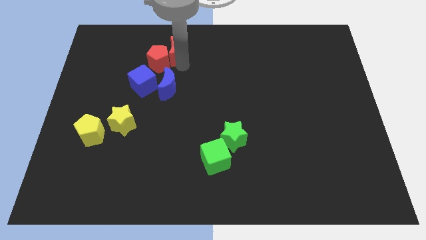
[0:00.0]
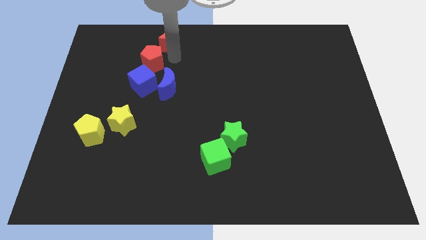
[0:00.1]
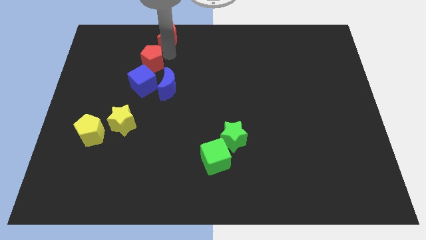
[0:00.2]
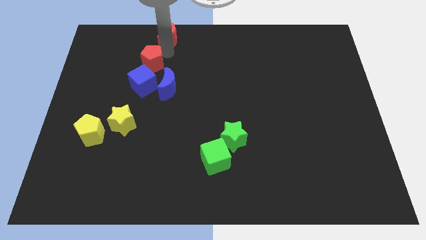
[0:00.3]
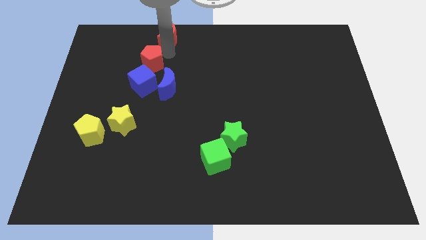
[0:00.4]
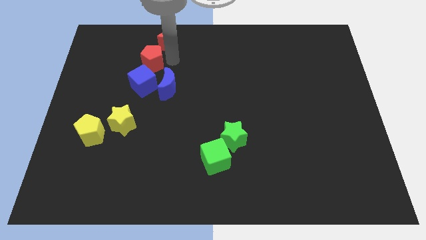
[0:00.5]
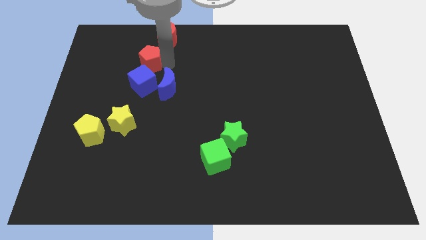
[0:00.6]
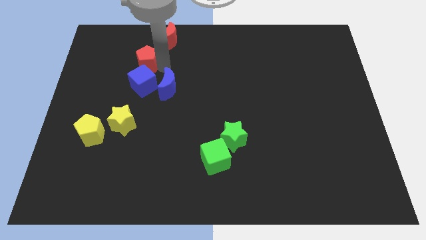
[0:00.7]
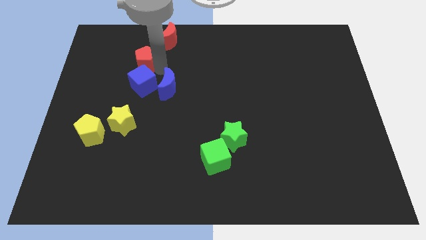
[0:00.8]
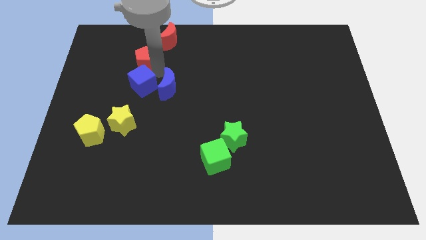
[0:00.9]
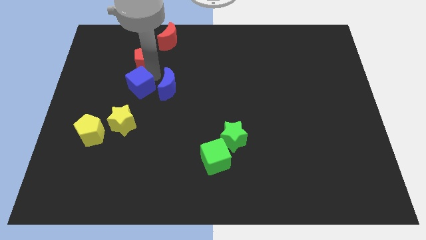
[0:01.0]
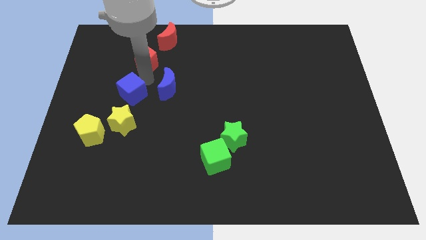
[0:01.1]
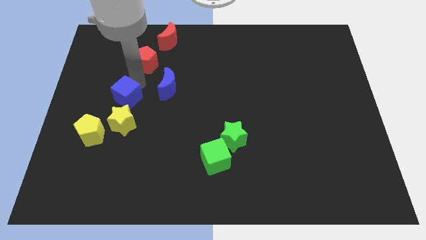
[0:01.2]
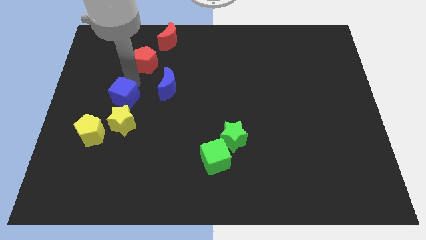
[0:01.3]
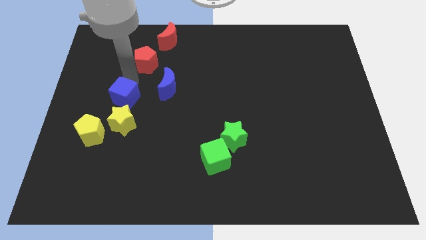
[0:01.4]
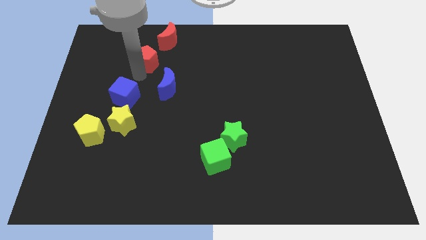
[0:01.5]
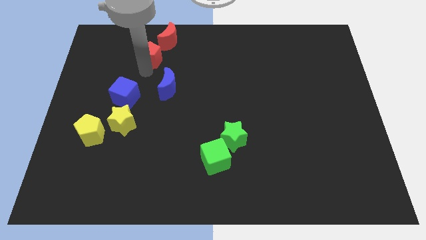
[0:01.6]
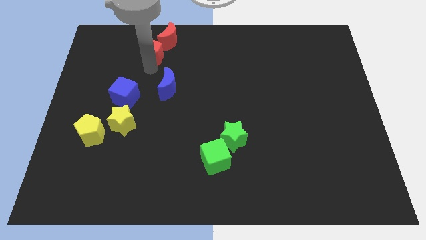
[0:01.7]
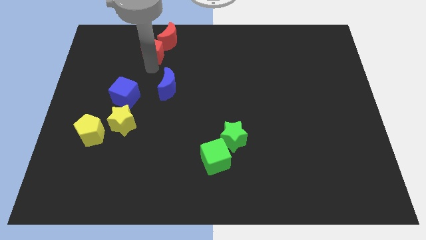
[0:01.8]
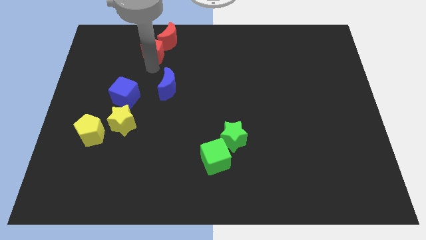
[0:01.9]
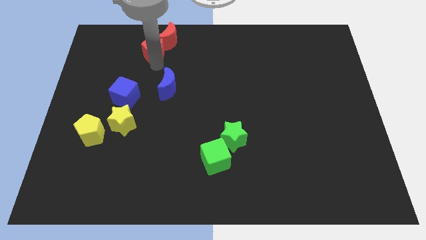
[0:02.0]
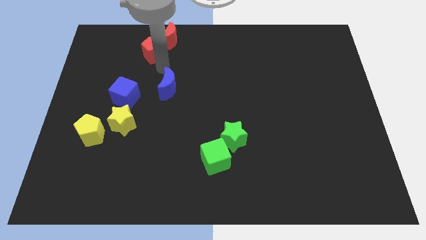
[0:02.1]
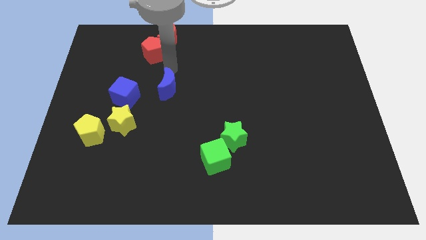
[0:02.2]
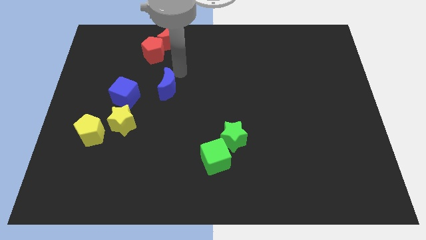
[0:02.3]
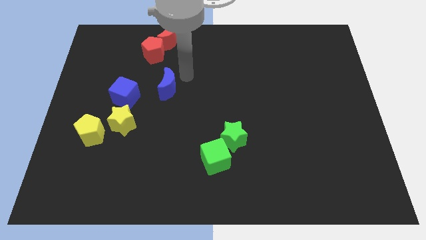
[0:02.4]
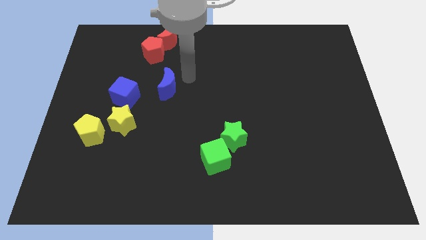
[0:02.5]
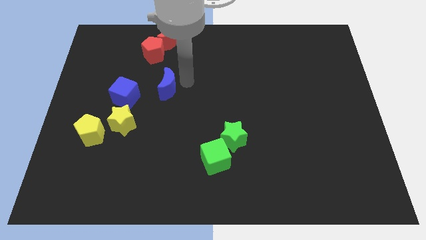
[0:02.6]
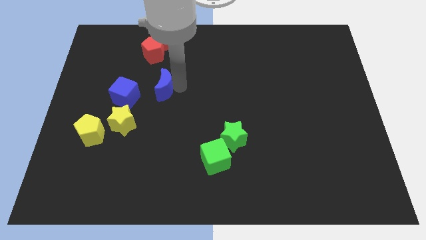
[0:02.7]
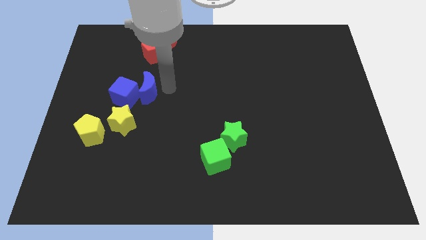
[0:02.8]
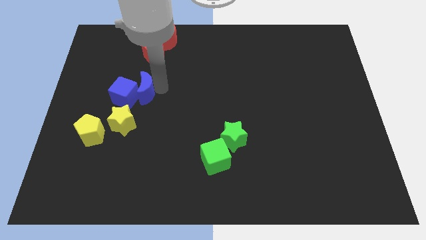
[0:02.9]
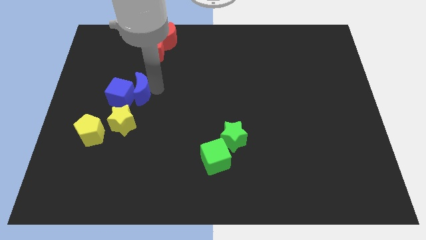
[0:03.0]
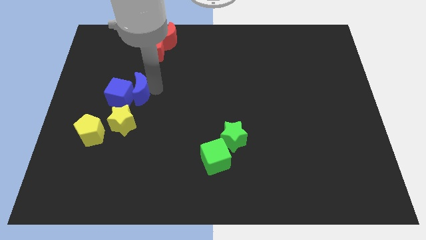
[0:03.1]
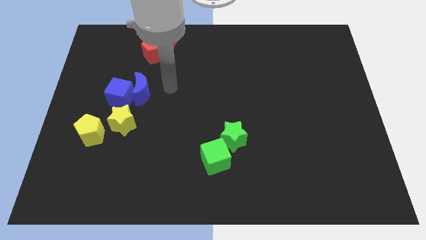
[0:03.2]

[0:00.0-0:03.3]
arrange both blue blocks together and red blocks together at the top right side of the both yellow blocks

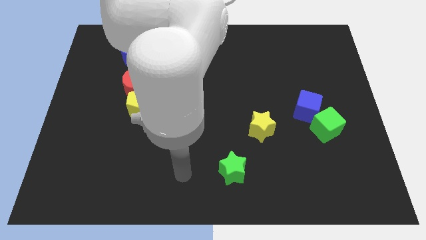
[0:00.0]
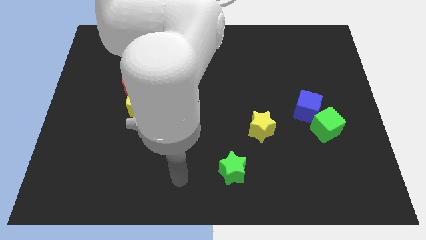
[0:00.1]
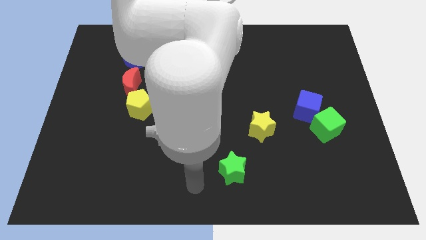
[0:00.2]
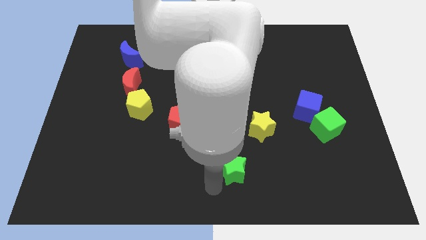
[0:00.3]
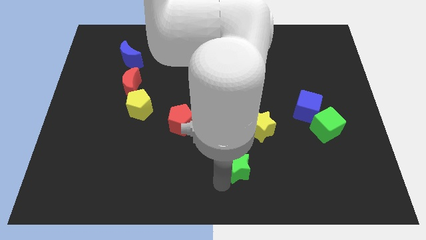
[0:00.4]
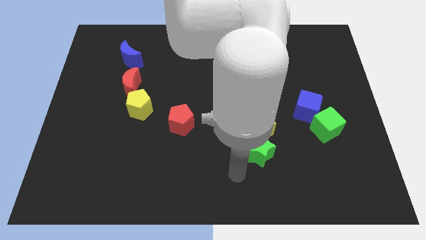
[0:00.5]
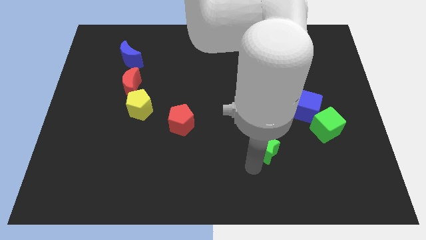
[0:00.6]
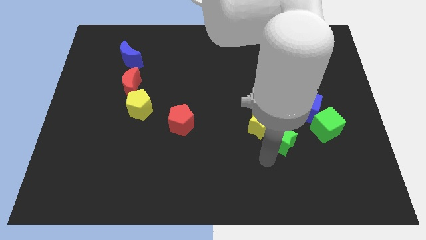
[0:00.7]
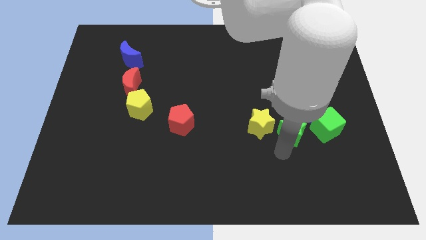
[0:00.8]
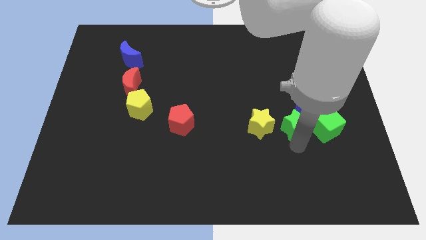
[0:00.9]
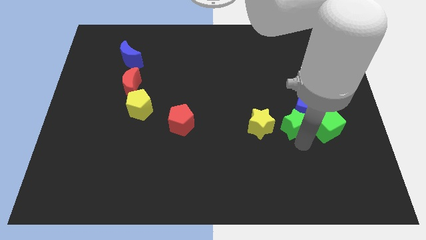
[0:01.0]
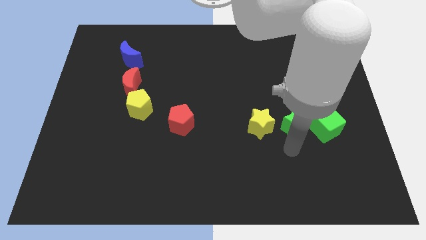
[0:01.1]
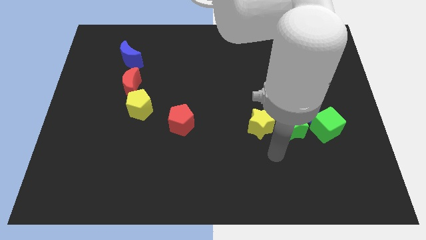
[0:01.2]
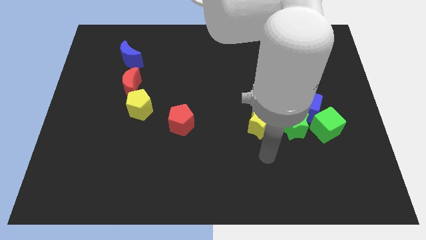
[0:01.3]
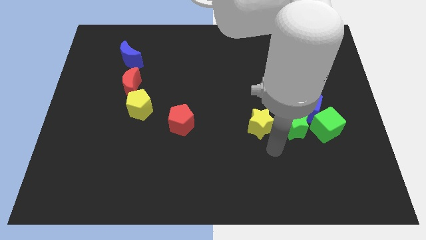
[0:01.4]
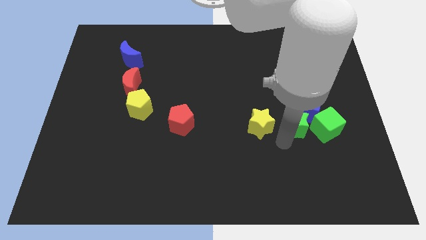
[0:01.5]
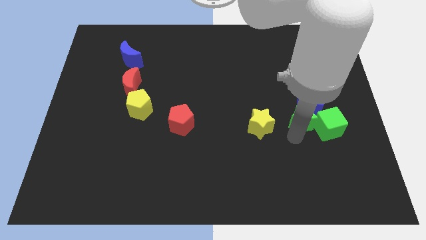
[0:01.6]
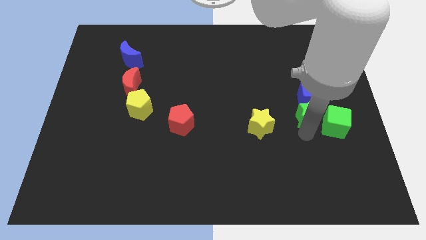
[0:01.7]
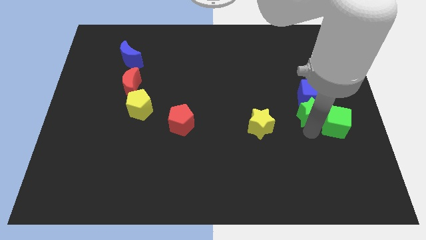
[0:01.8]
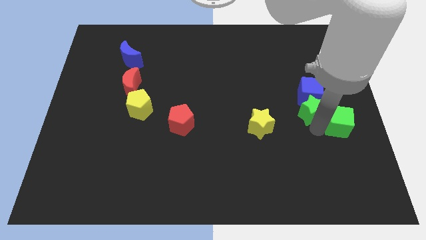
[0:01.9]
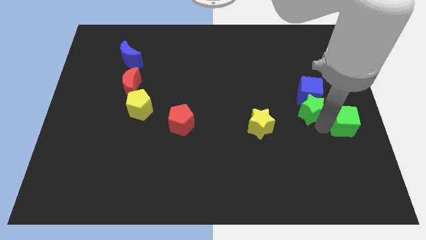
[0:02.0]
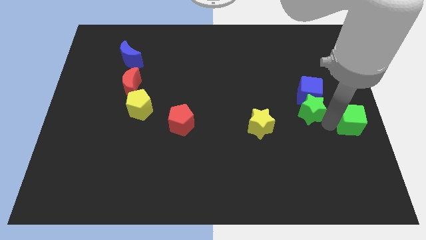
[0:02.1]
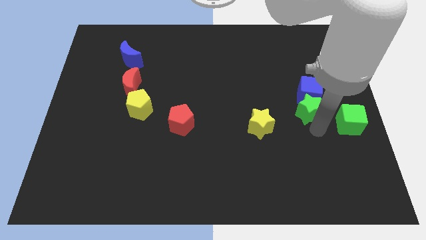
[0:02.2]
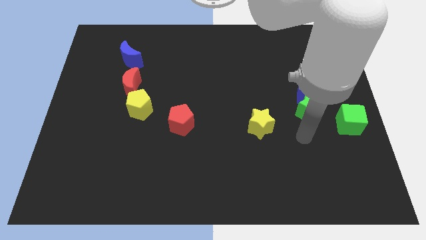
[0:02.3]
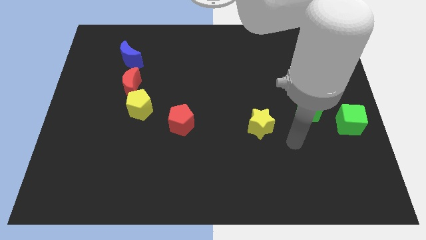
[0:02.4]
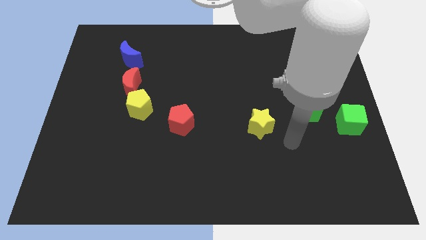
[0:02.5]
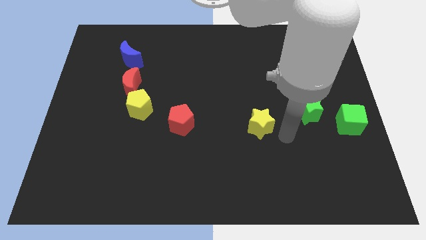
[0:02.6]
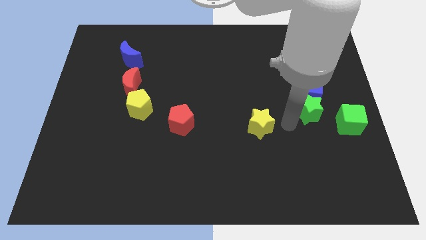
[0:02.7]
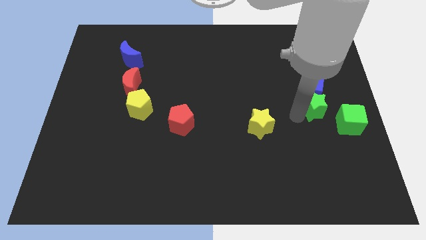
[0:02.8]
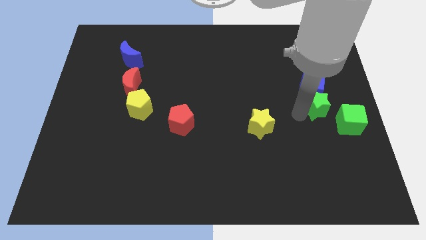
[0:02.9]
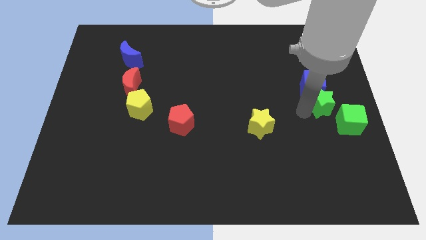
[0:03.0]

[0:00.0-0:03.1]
push green star into blue cube

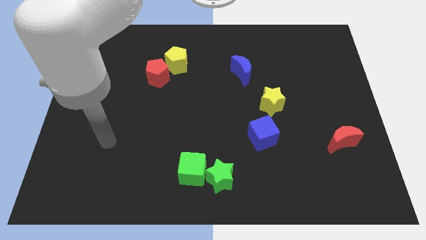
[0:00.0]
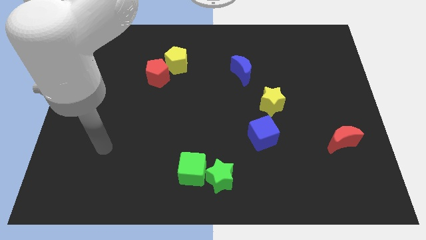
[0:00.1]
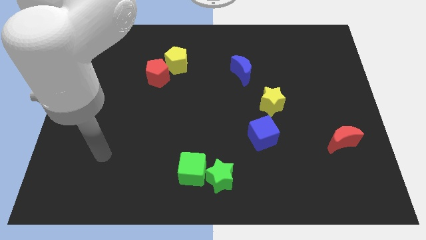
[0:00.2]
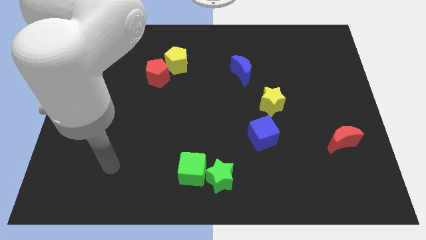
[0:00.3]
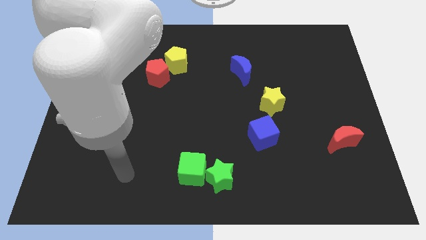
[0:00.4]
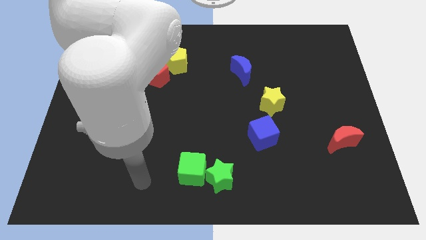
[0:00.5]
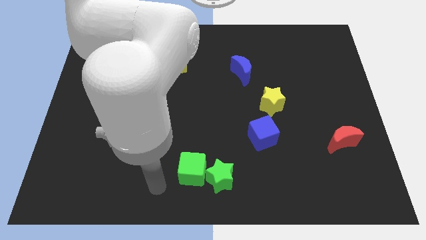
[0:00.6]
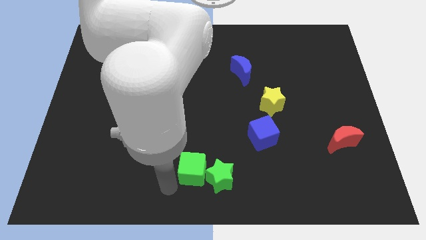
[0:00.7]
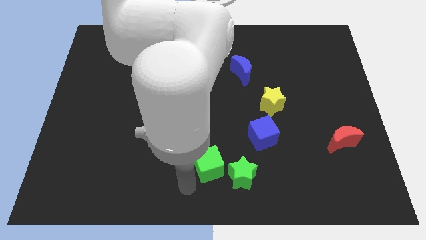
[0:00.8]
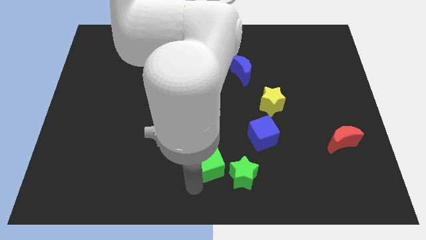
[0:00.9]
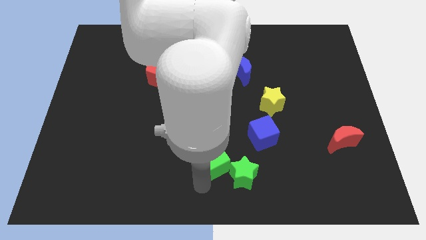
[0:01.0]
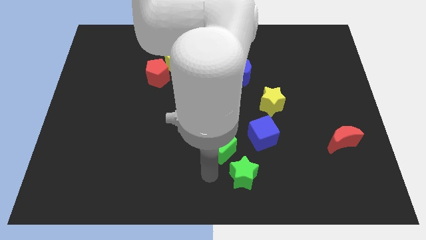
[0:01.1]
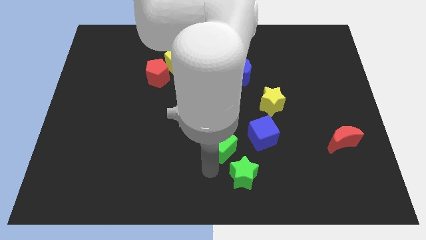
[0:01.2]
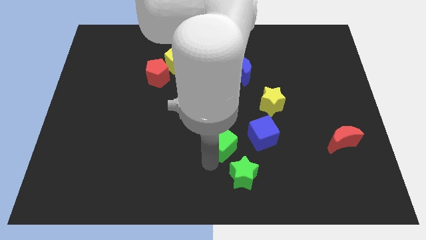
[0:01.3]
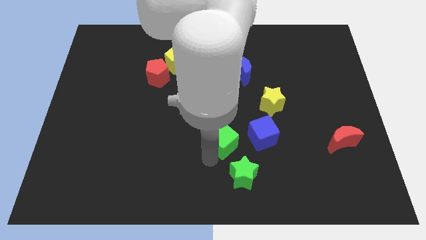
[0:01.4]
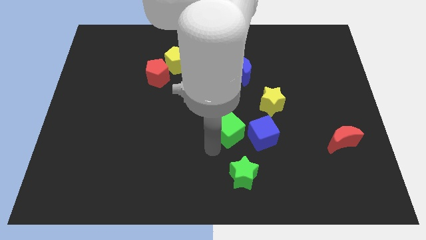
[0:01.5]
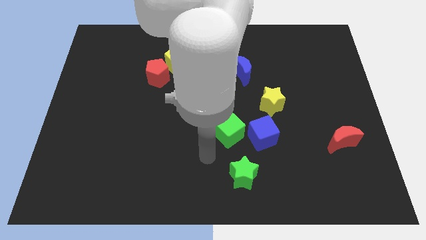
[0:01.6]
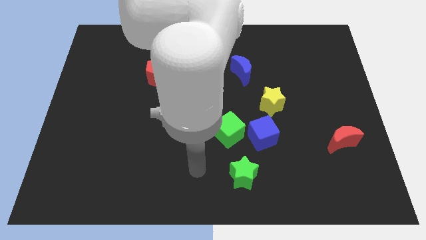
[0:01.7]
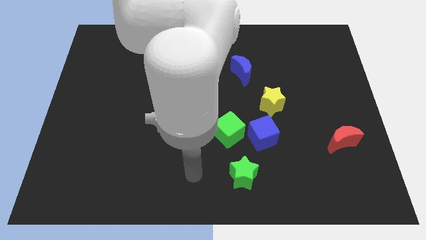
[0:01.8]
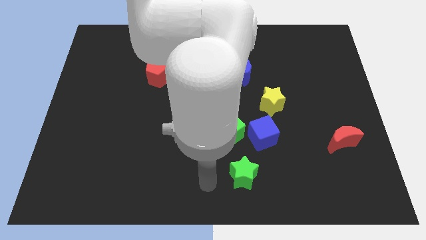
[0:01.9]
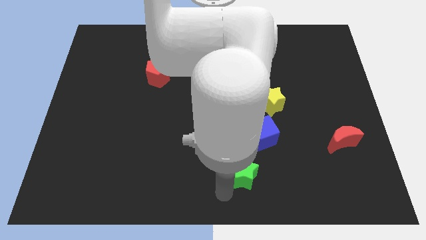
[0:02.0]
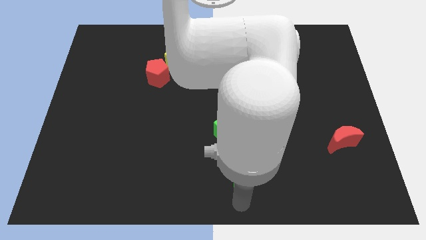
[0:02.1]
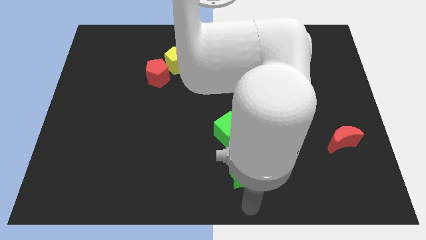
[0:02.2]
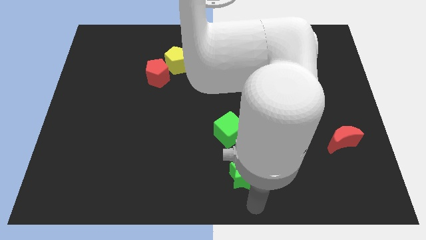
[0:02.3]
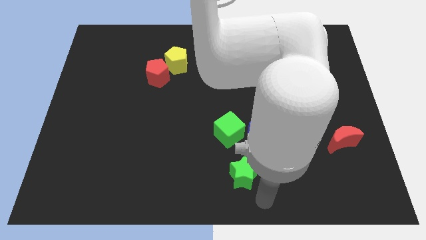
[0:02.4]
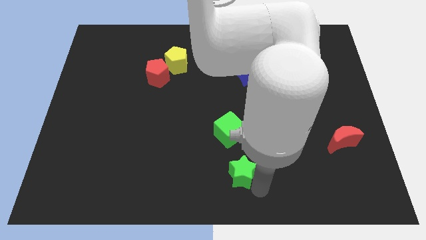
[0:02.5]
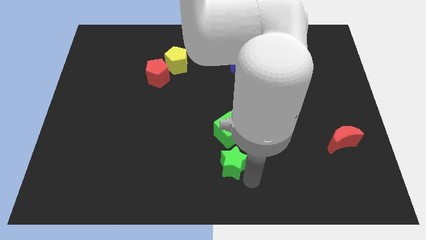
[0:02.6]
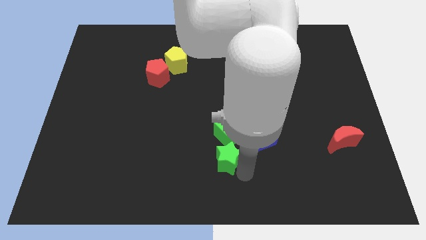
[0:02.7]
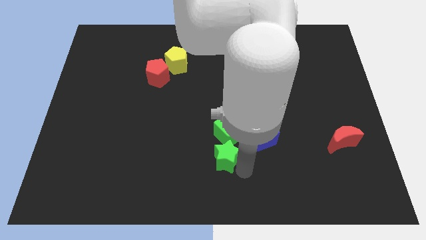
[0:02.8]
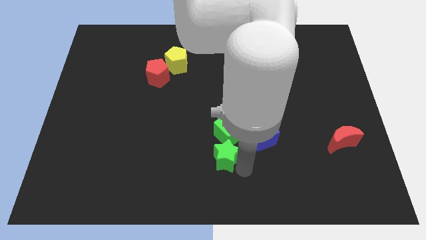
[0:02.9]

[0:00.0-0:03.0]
move the green star and green cube to the left side of the blue cube
